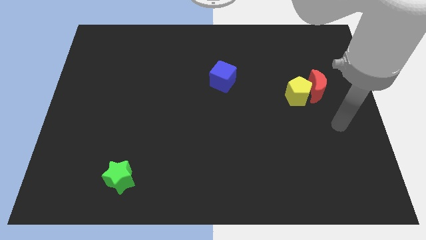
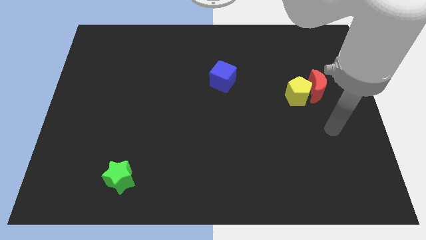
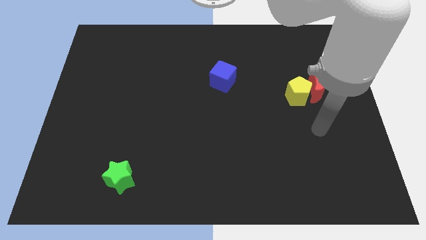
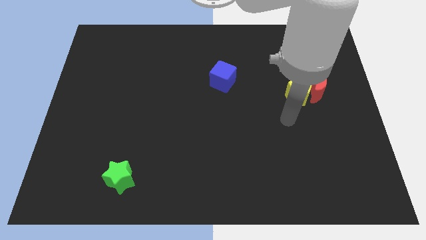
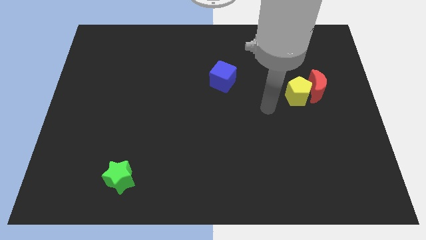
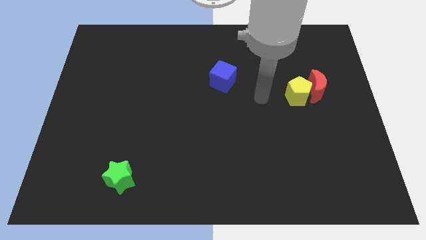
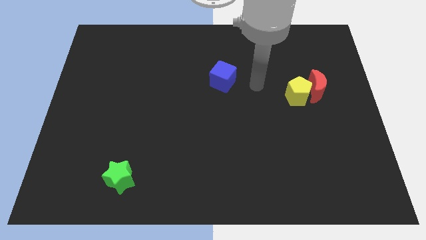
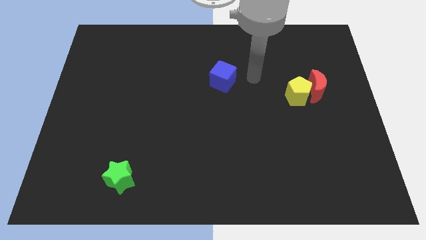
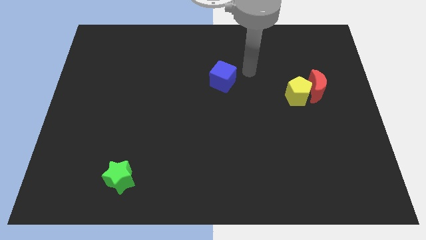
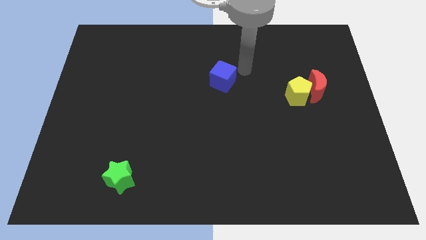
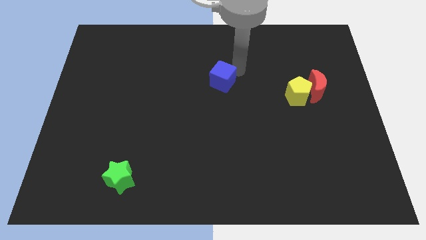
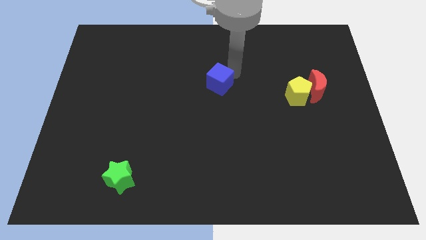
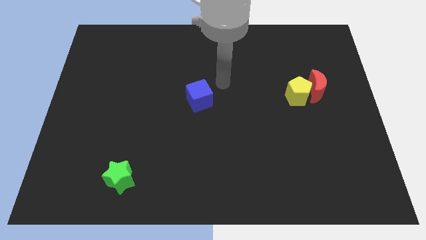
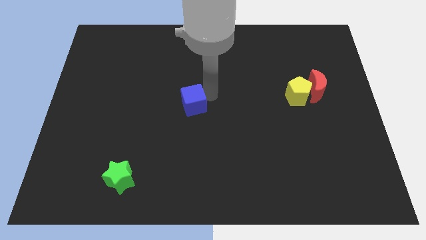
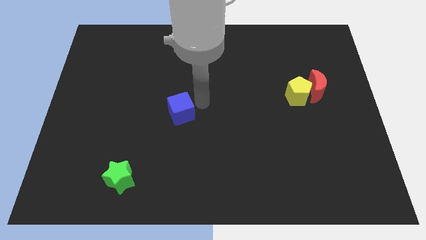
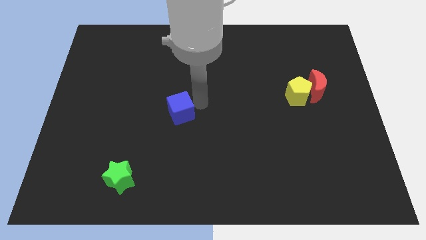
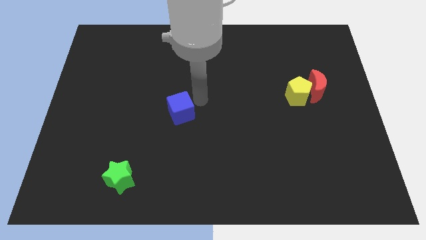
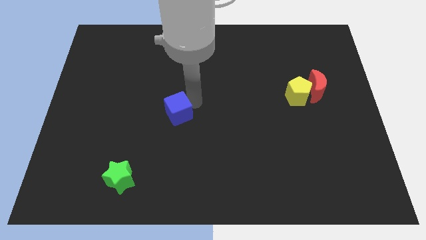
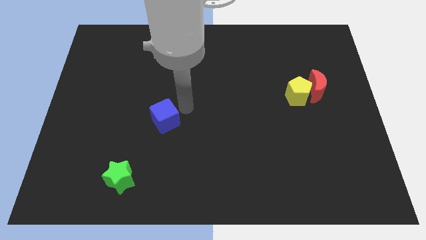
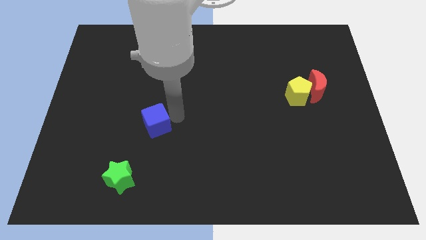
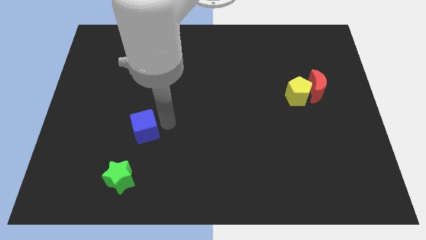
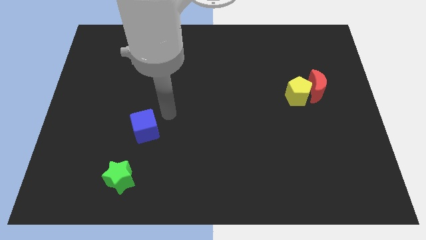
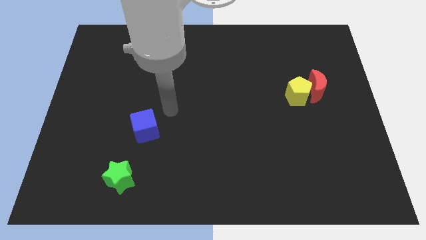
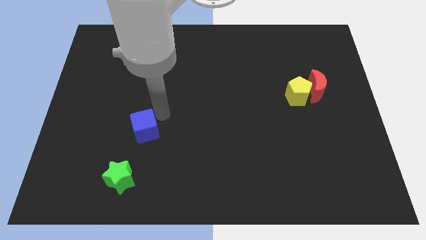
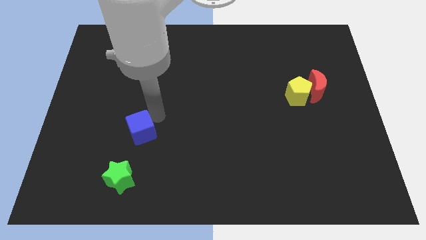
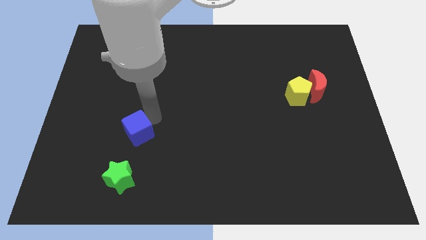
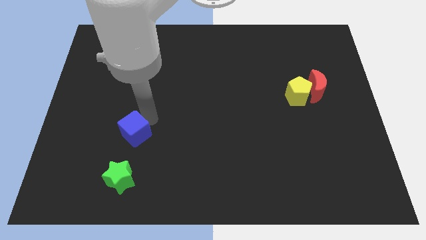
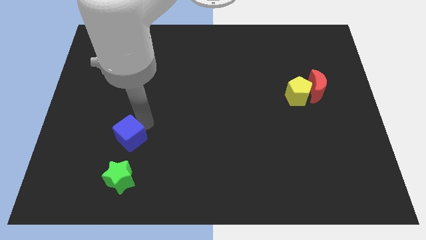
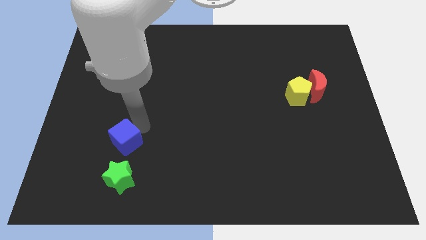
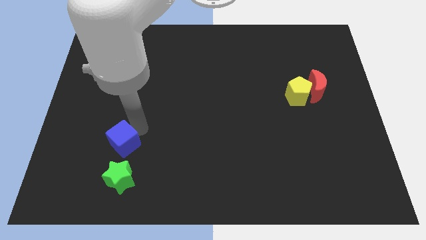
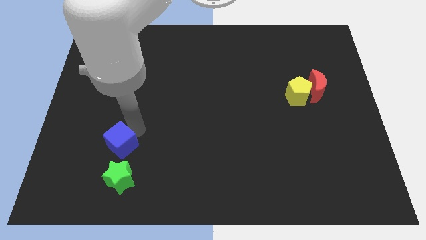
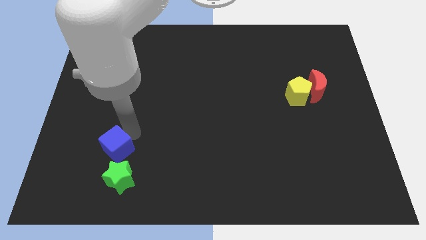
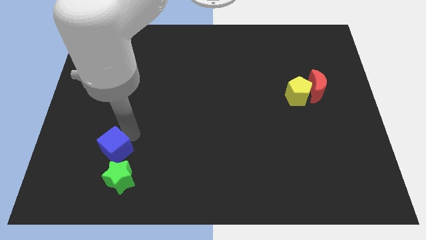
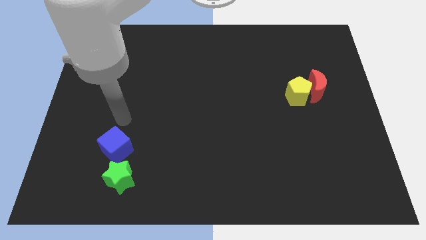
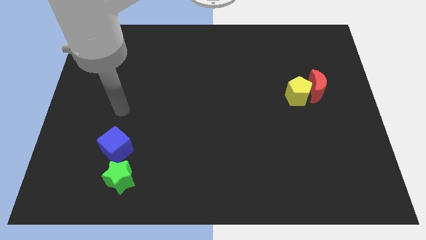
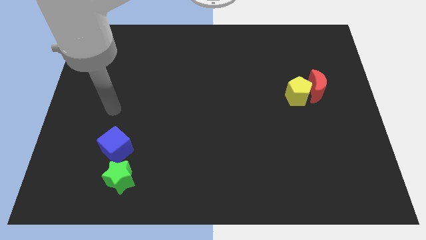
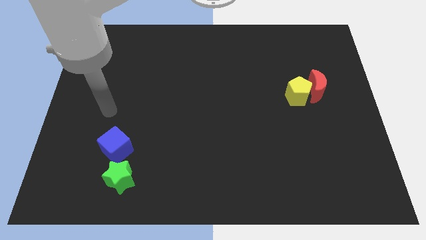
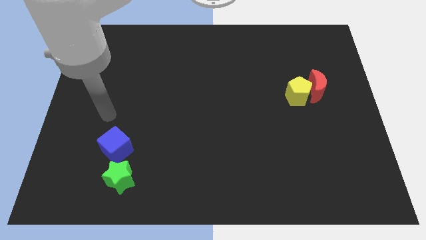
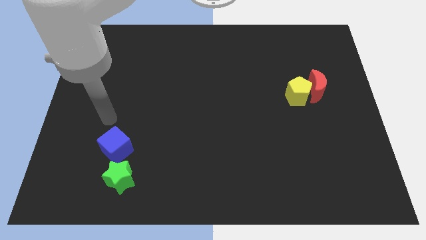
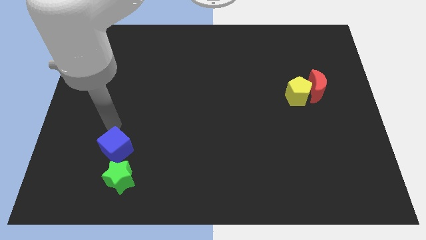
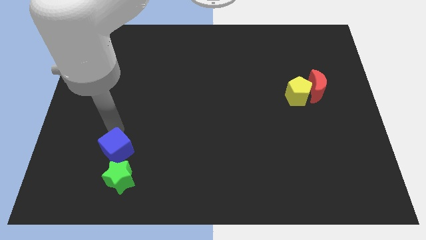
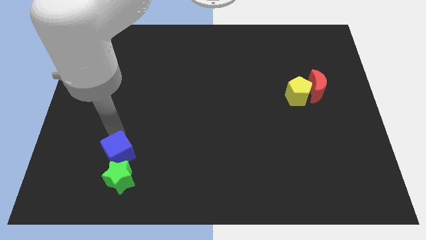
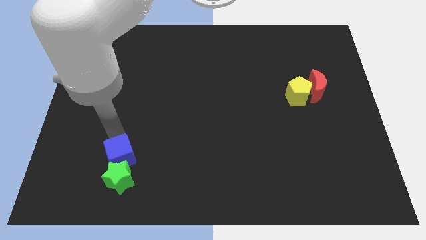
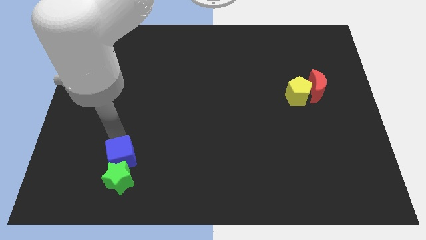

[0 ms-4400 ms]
slide the blue block to the green block

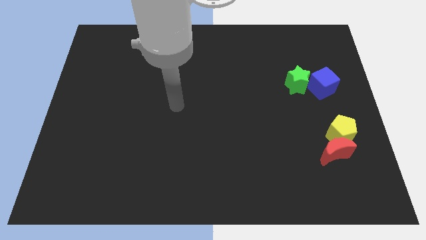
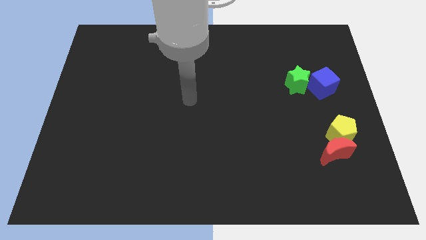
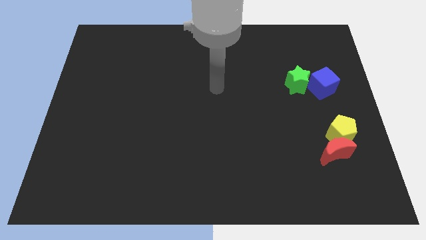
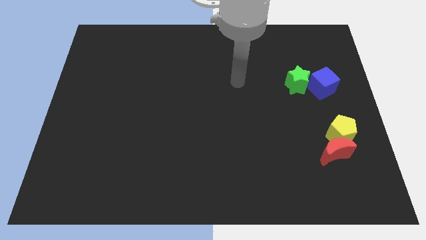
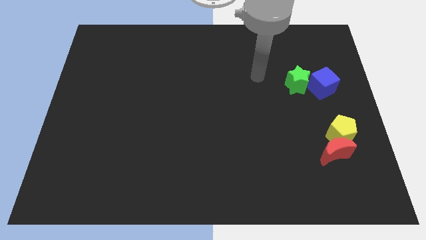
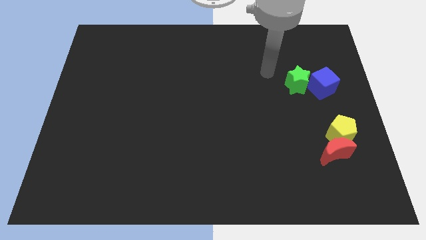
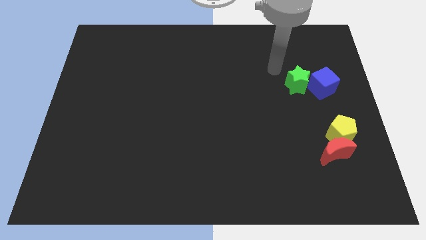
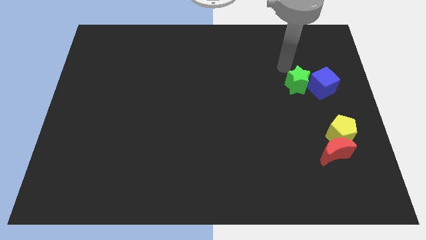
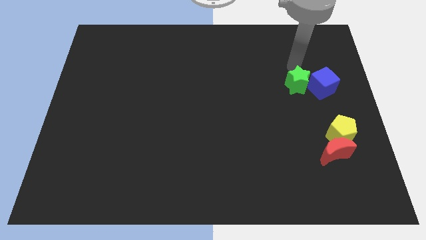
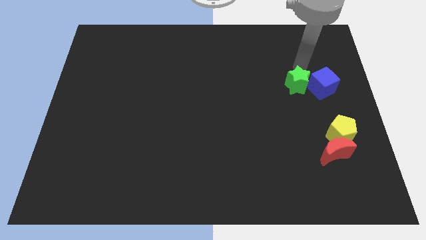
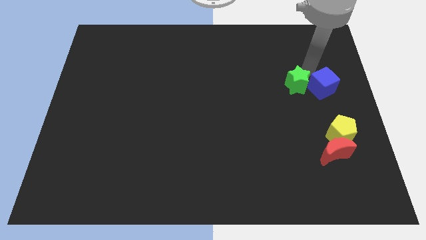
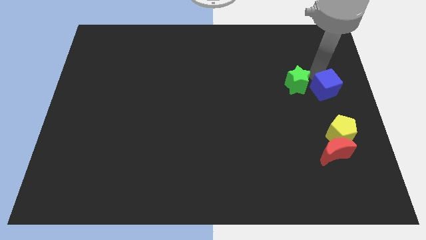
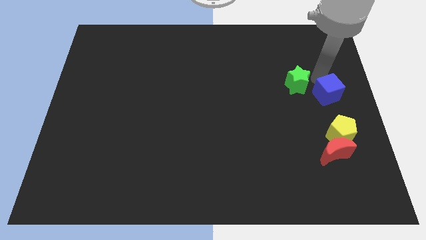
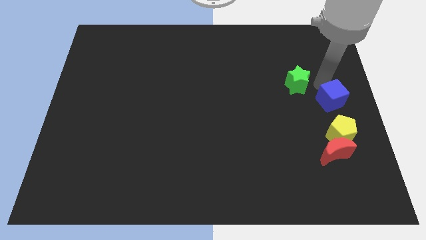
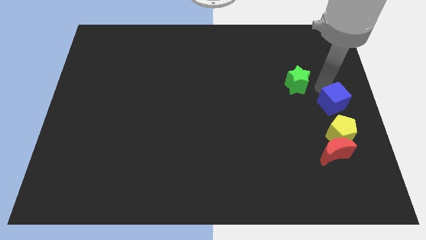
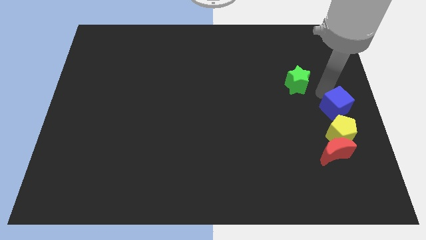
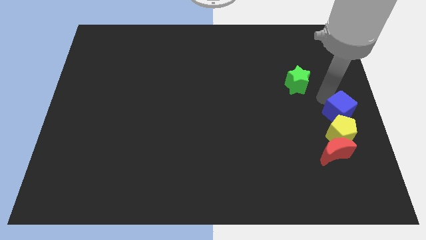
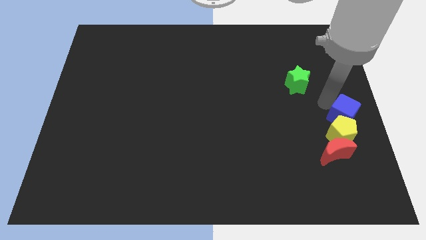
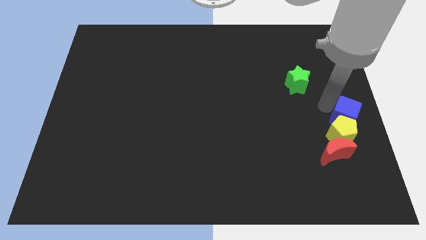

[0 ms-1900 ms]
put the blue cube to the yellow pentagon

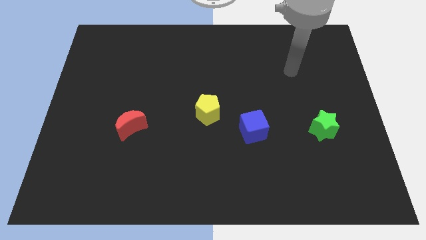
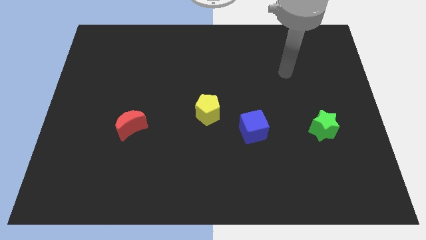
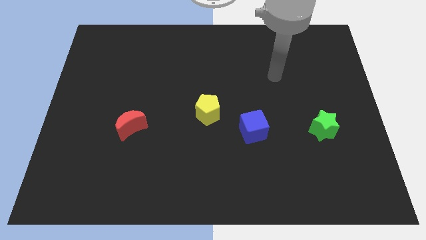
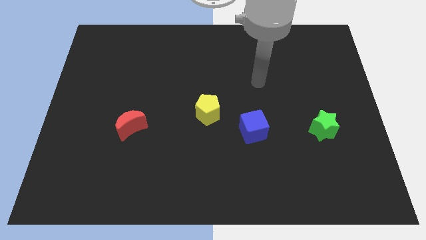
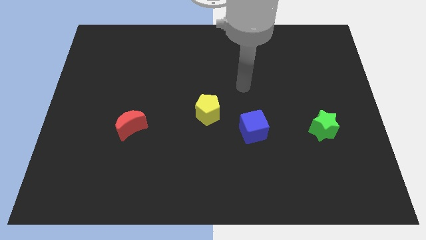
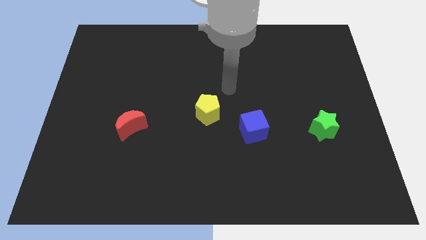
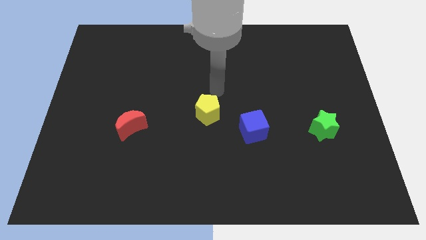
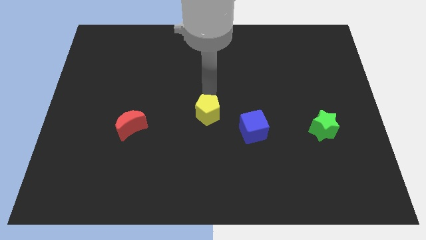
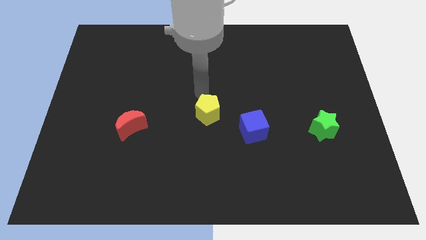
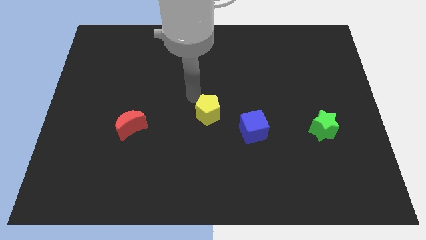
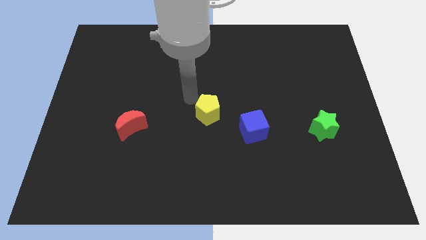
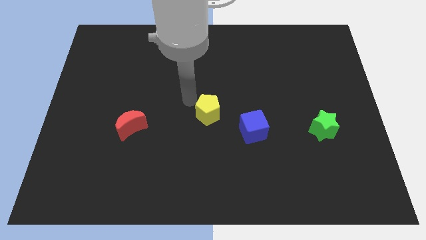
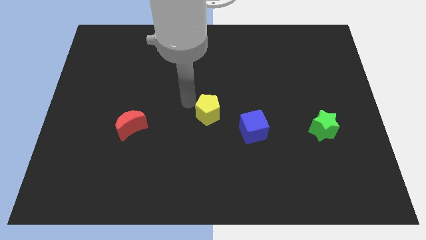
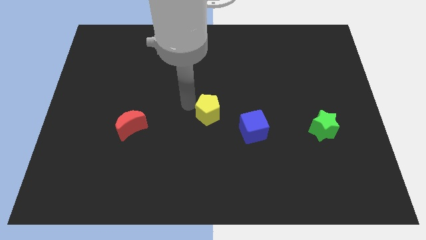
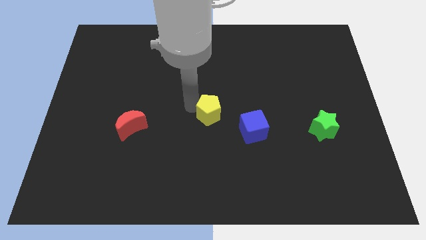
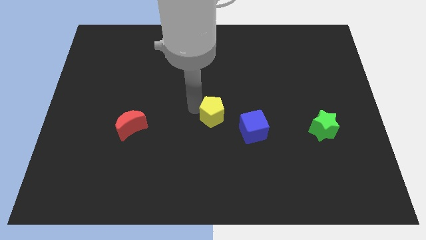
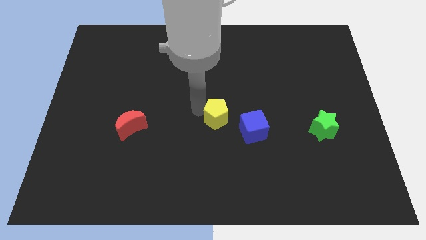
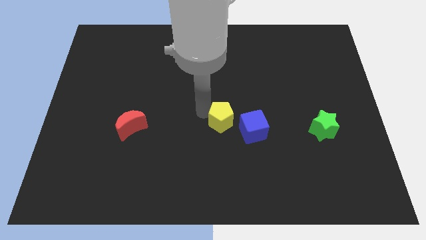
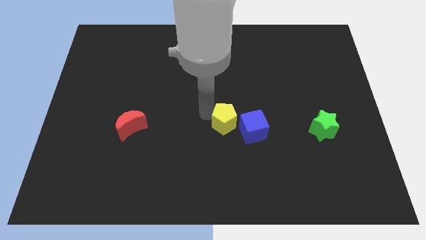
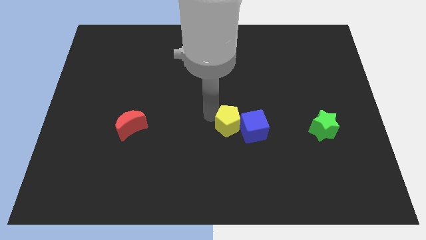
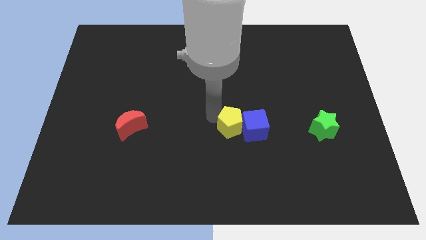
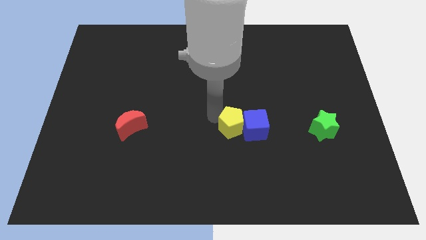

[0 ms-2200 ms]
put the yellow pentagon close to the blue block
